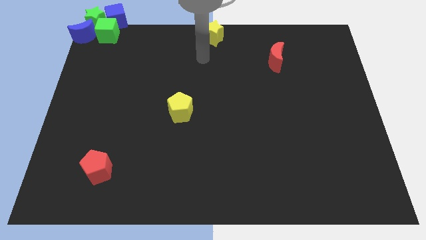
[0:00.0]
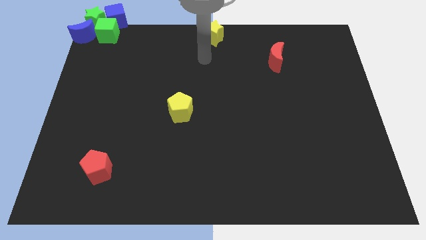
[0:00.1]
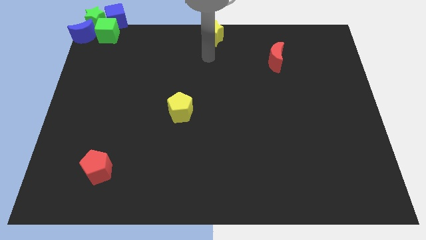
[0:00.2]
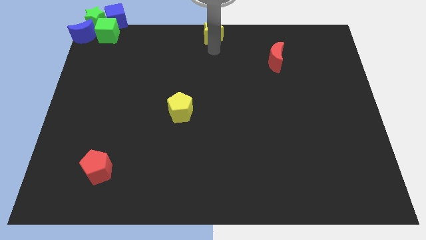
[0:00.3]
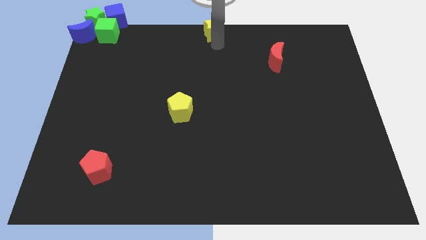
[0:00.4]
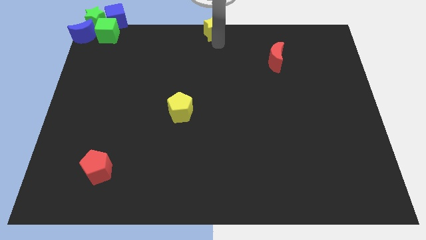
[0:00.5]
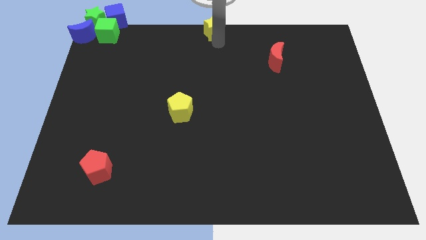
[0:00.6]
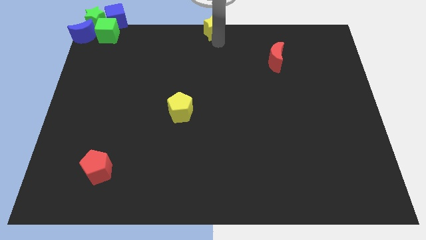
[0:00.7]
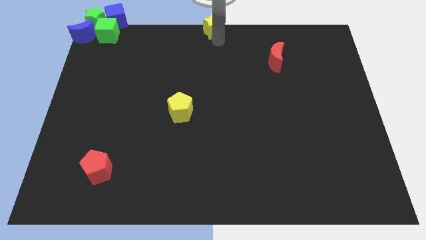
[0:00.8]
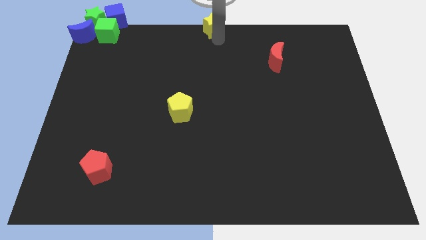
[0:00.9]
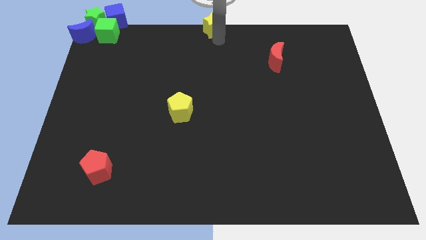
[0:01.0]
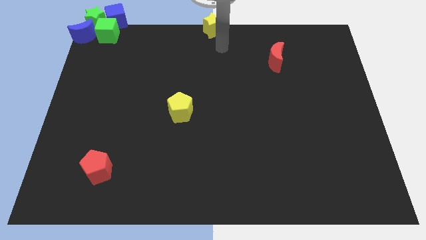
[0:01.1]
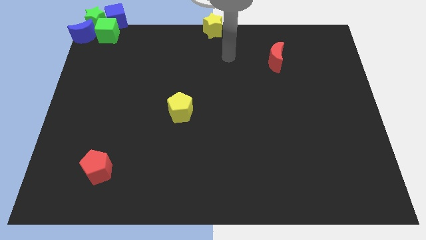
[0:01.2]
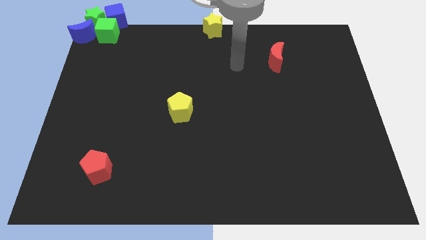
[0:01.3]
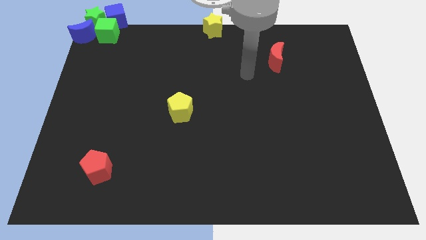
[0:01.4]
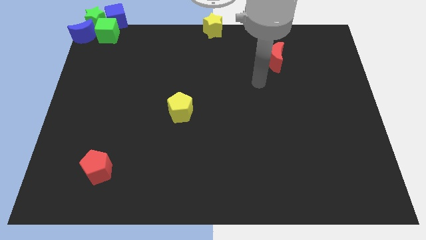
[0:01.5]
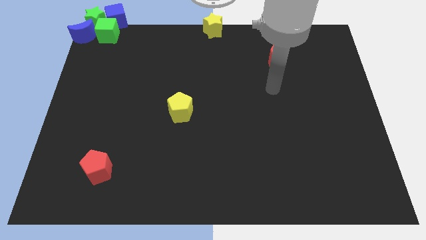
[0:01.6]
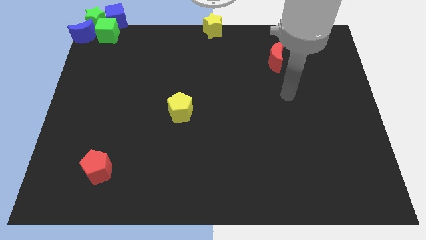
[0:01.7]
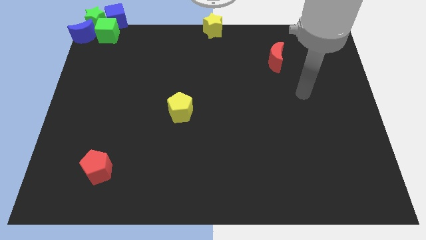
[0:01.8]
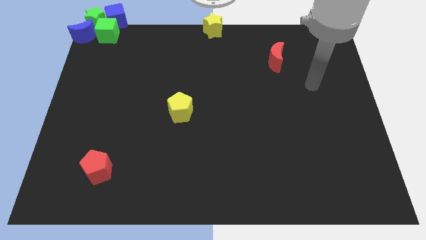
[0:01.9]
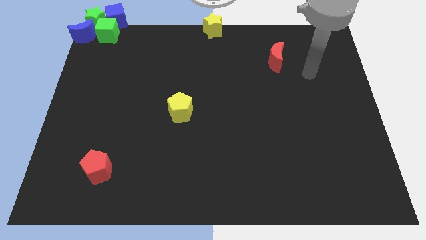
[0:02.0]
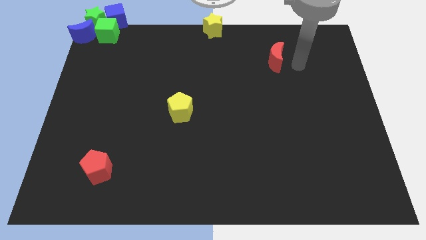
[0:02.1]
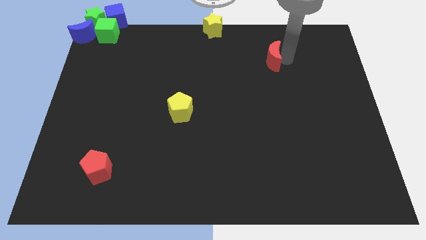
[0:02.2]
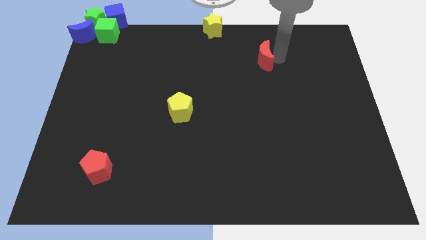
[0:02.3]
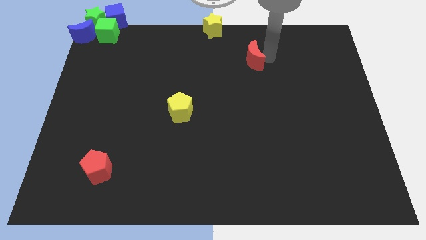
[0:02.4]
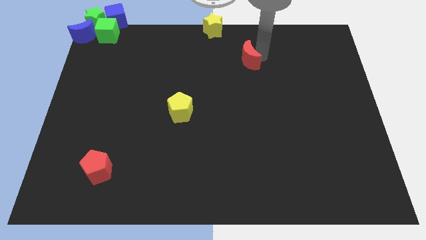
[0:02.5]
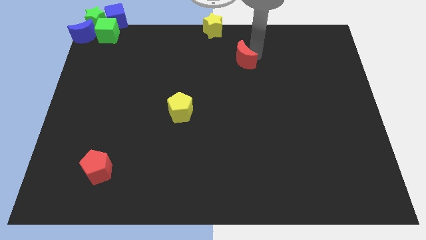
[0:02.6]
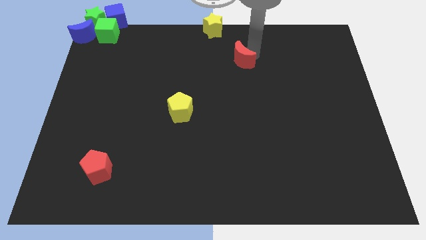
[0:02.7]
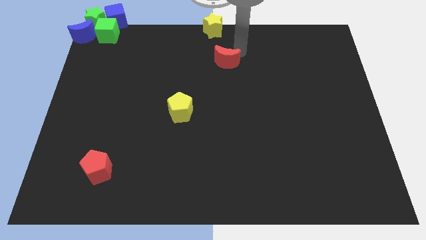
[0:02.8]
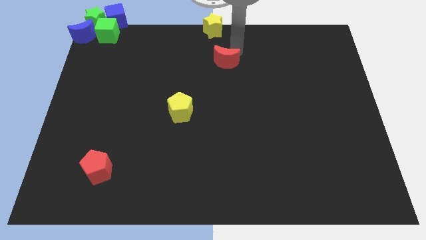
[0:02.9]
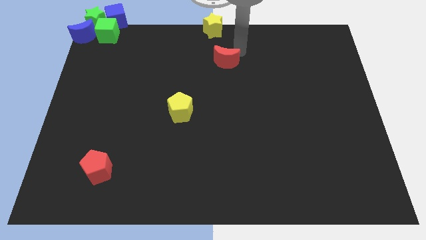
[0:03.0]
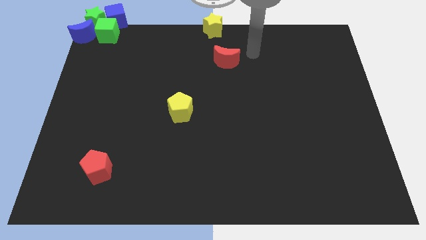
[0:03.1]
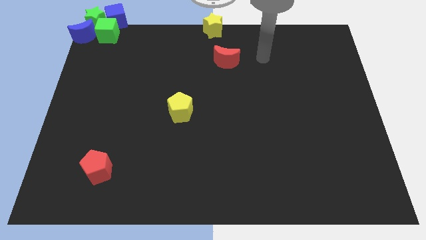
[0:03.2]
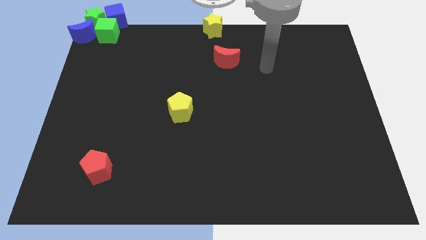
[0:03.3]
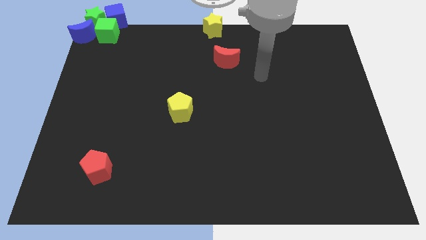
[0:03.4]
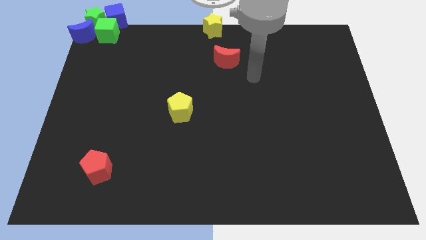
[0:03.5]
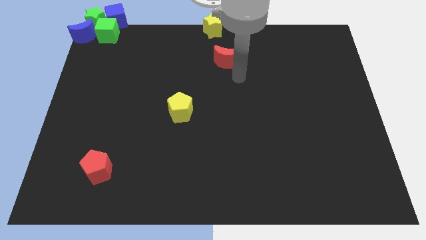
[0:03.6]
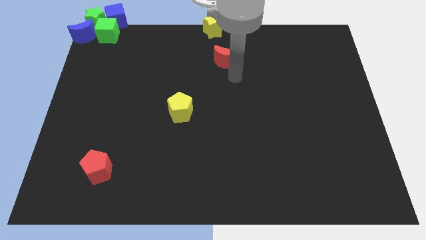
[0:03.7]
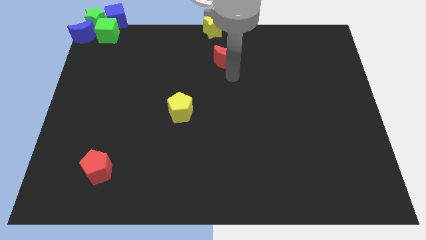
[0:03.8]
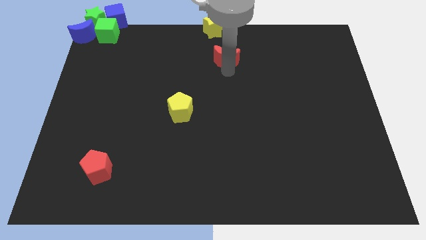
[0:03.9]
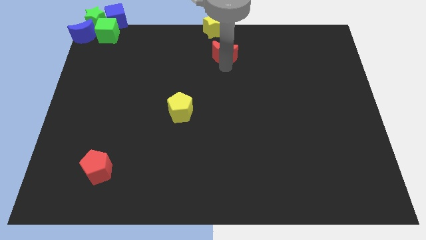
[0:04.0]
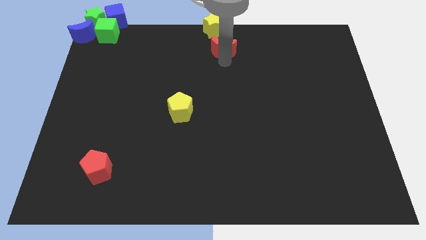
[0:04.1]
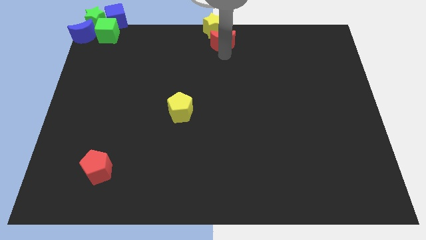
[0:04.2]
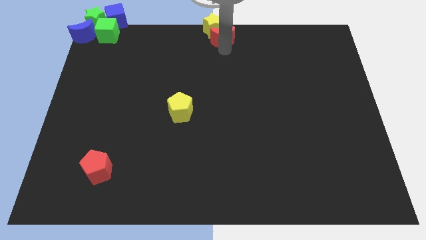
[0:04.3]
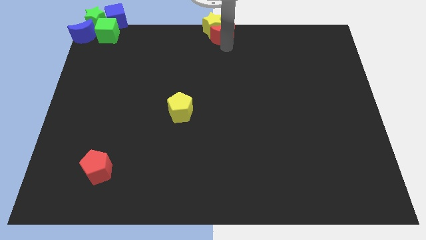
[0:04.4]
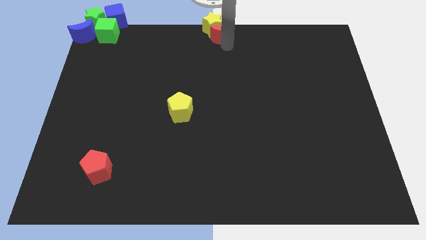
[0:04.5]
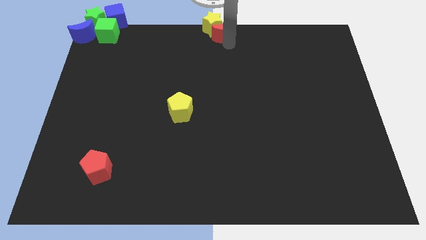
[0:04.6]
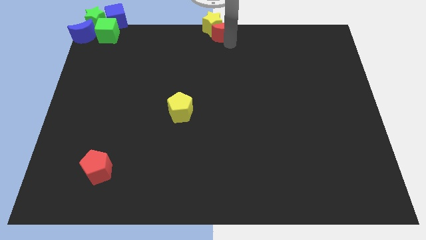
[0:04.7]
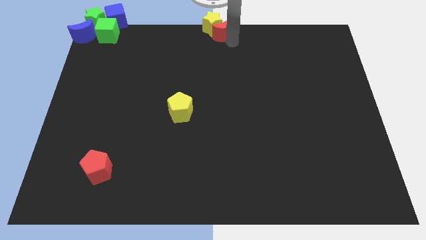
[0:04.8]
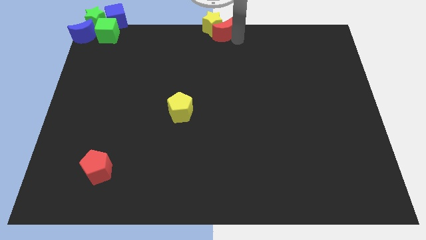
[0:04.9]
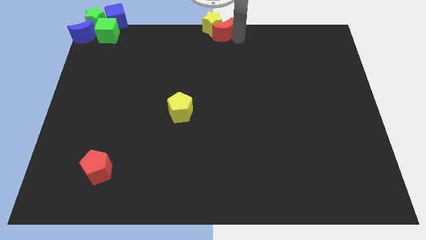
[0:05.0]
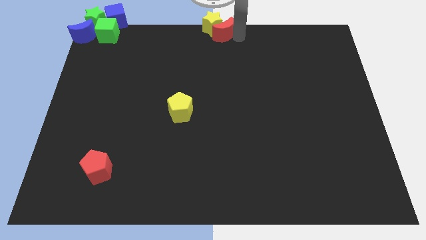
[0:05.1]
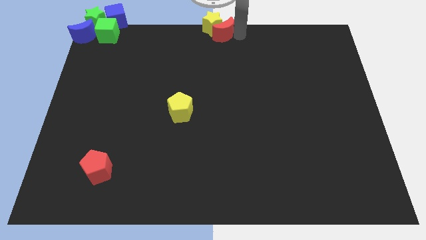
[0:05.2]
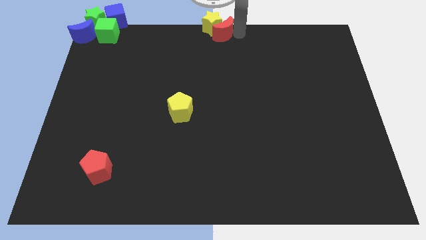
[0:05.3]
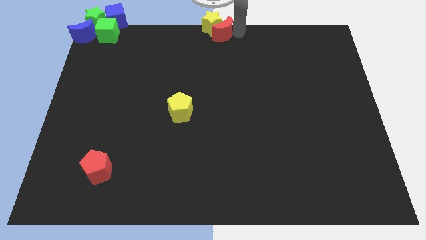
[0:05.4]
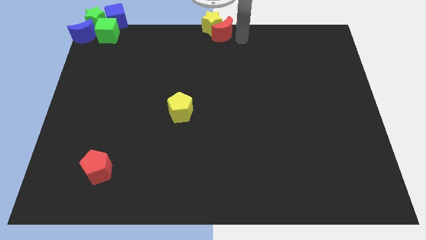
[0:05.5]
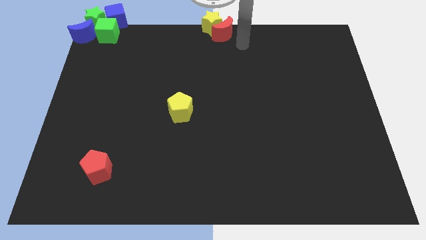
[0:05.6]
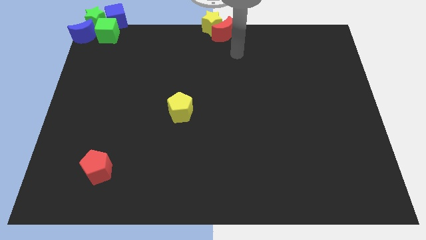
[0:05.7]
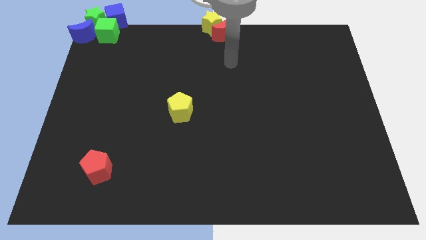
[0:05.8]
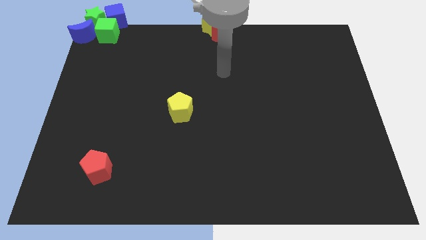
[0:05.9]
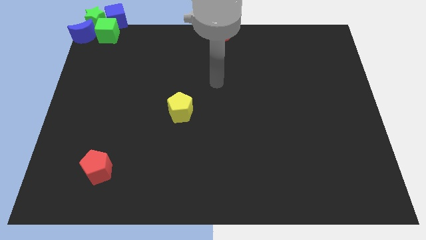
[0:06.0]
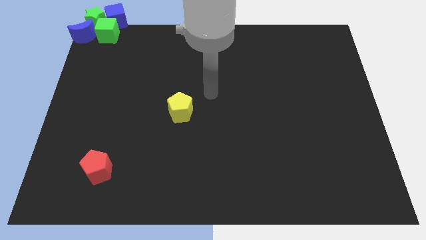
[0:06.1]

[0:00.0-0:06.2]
move the red moon close to the yellow star

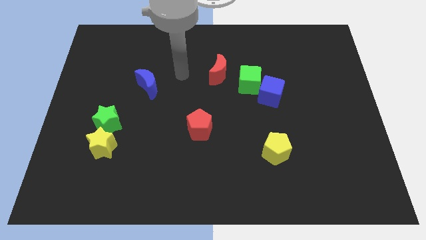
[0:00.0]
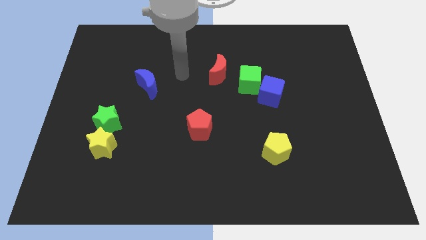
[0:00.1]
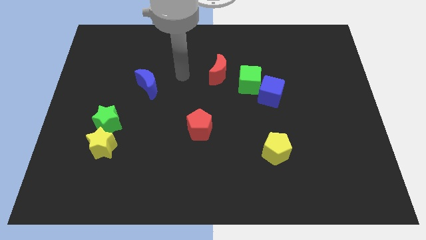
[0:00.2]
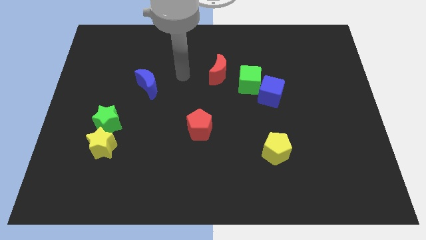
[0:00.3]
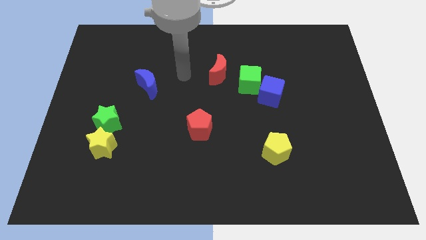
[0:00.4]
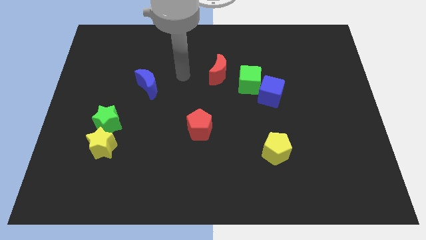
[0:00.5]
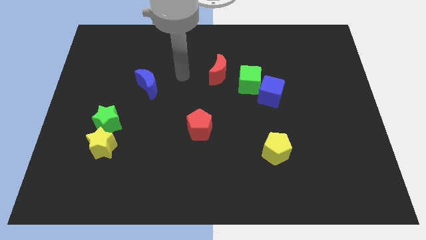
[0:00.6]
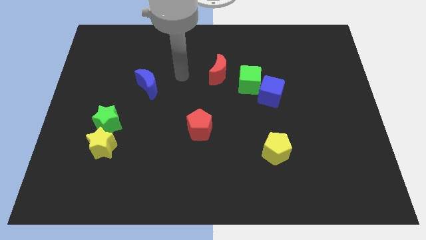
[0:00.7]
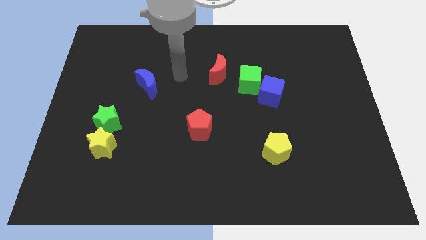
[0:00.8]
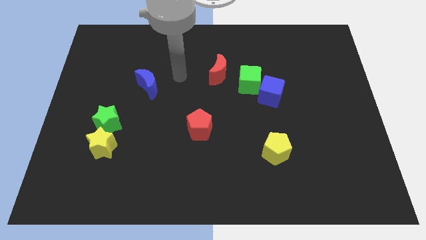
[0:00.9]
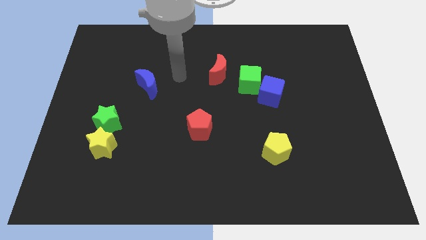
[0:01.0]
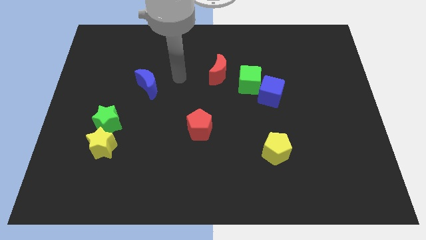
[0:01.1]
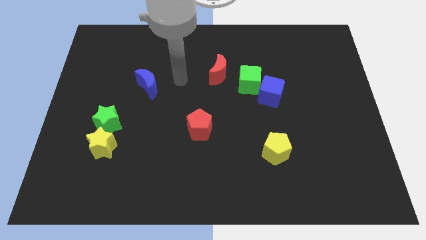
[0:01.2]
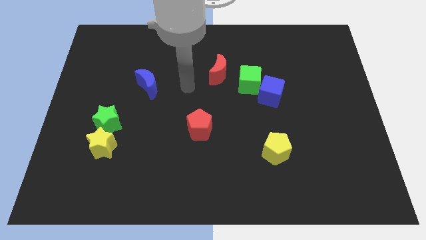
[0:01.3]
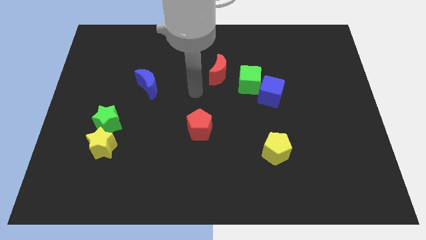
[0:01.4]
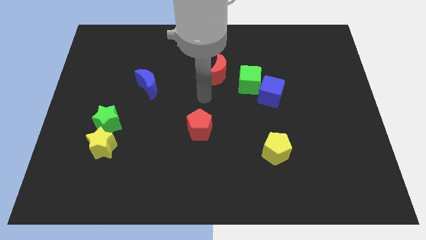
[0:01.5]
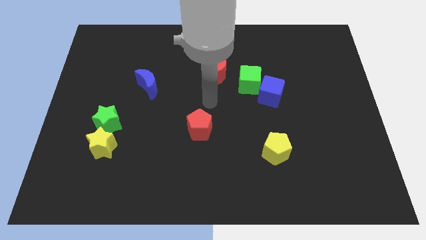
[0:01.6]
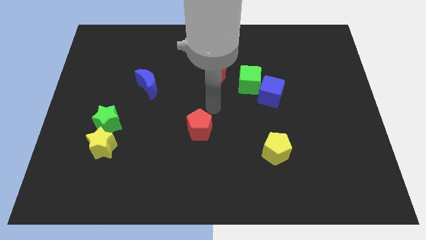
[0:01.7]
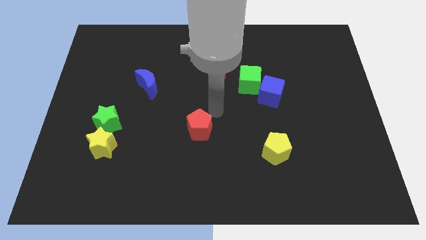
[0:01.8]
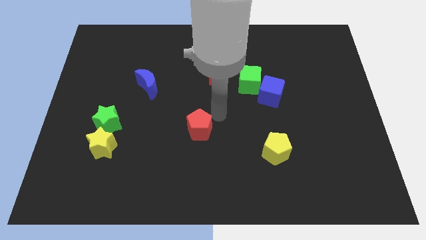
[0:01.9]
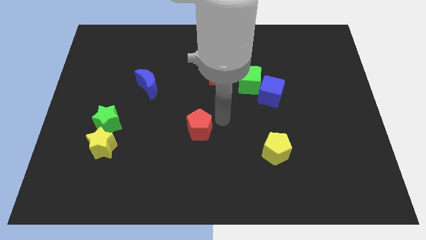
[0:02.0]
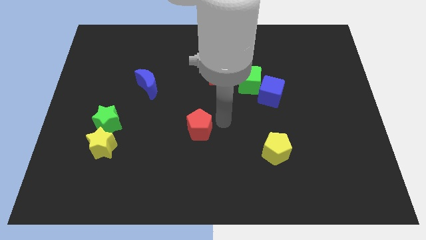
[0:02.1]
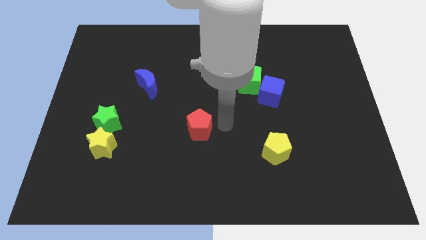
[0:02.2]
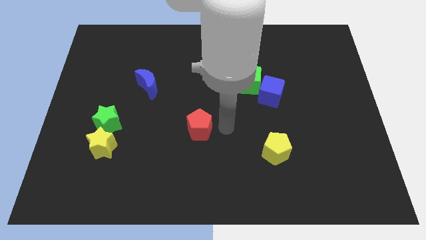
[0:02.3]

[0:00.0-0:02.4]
move your arm to the right side of the red pentagon

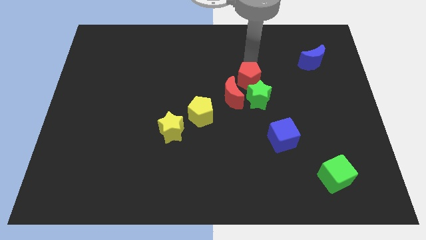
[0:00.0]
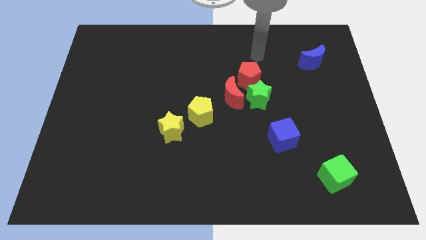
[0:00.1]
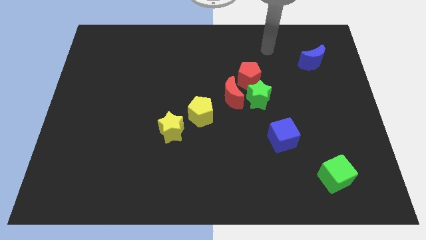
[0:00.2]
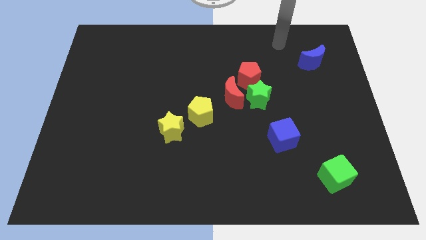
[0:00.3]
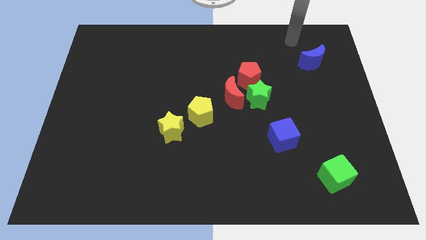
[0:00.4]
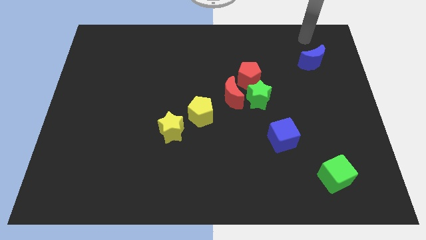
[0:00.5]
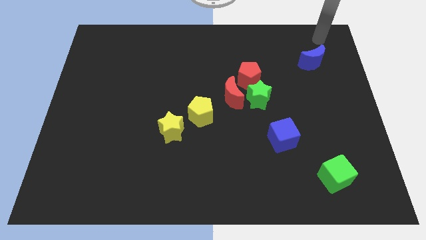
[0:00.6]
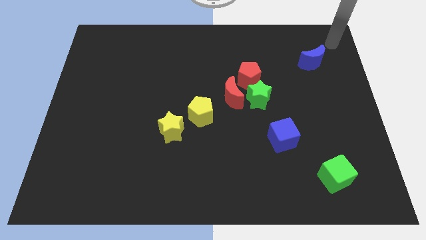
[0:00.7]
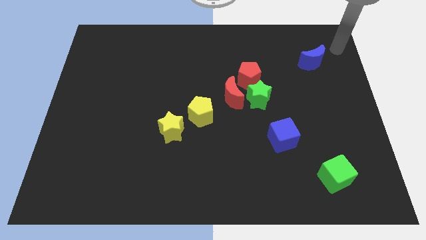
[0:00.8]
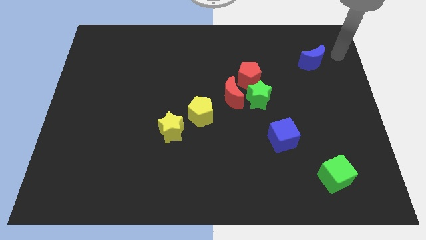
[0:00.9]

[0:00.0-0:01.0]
go away from the red pentagon
